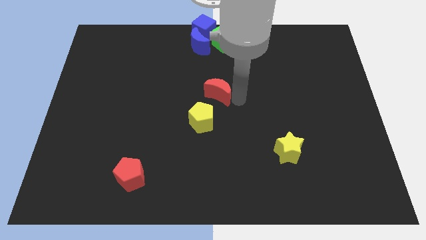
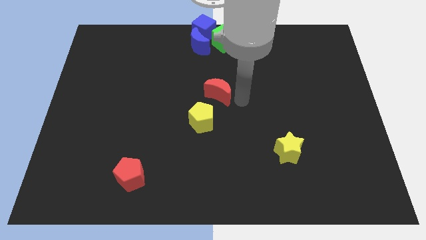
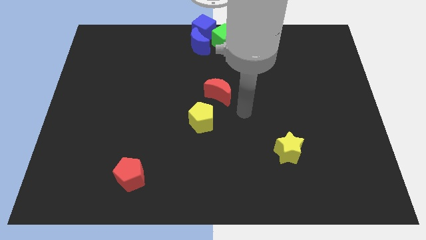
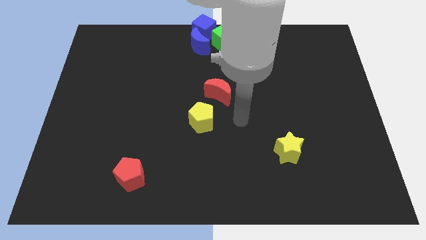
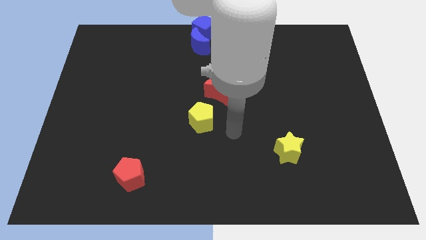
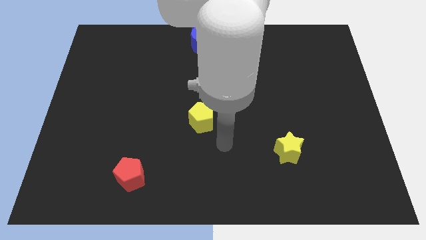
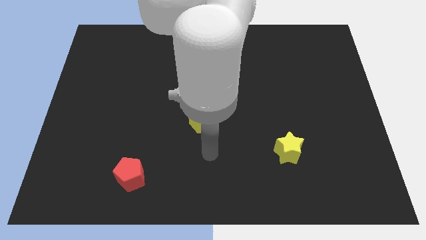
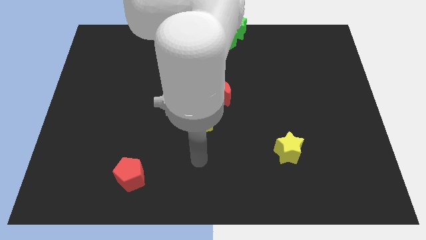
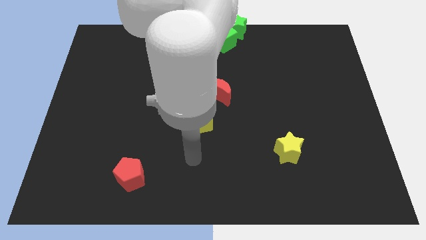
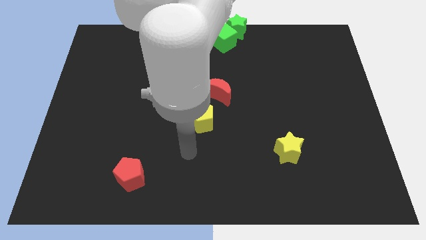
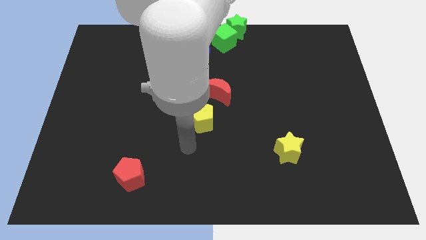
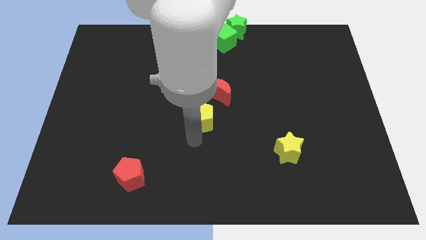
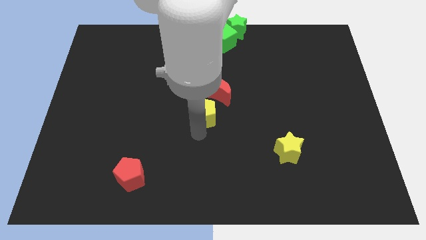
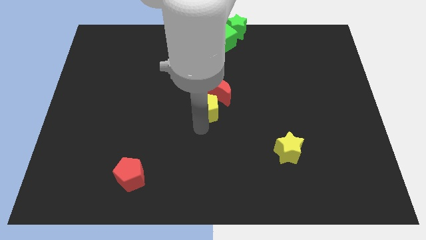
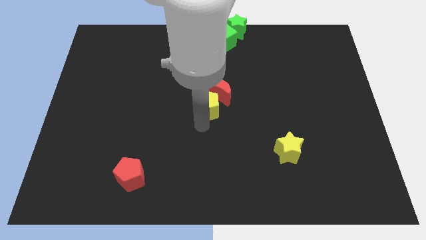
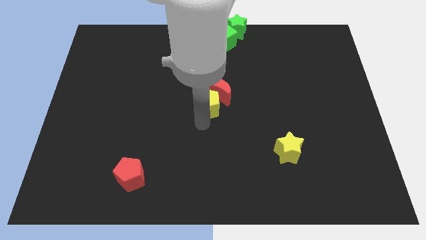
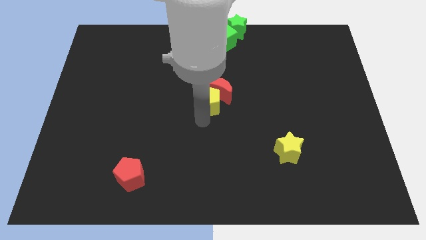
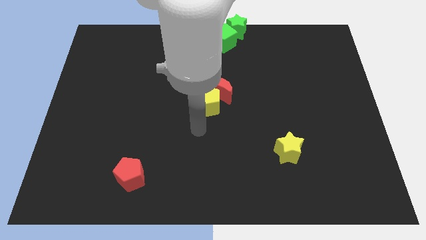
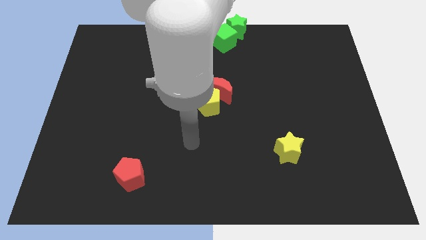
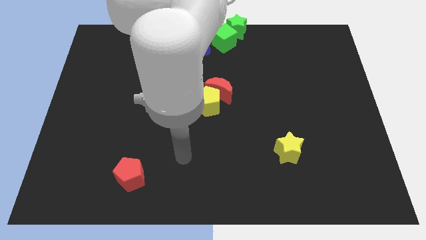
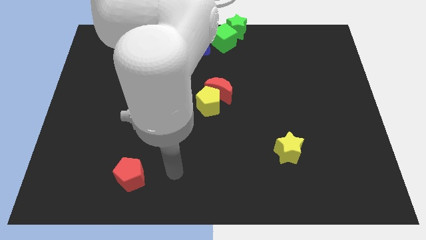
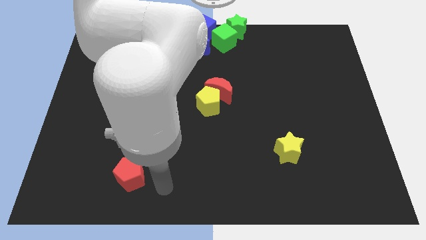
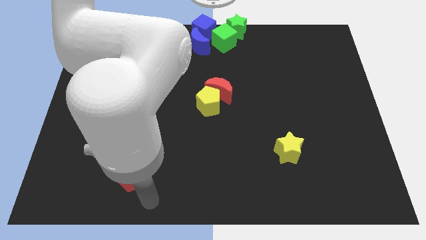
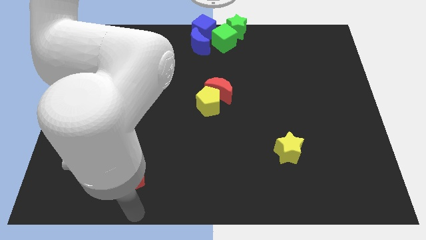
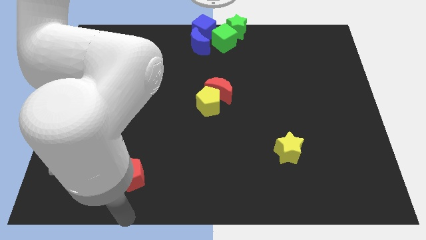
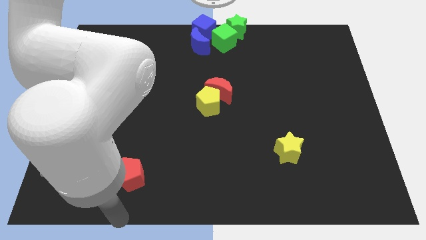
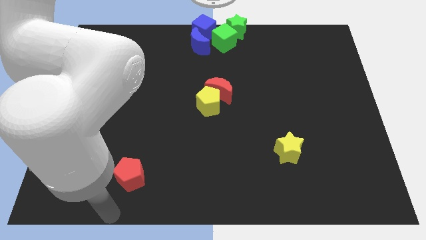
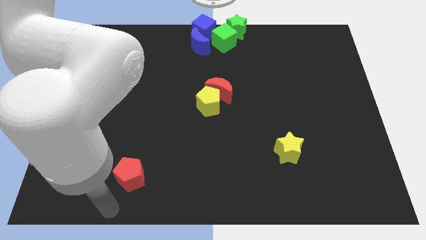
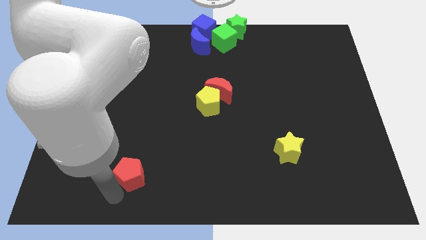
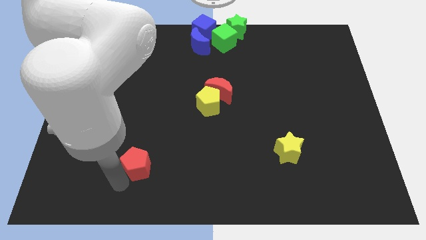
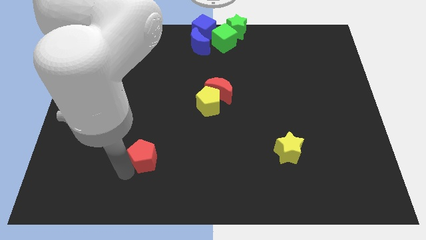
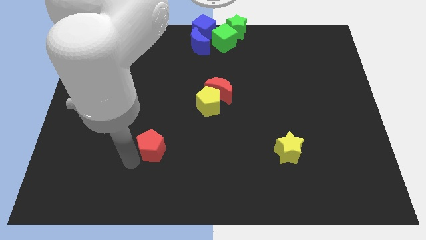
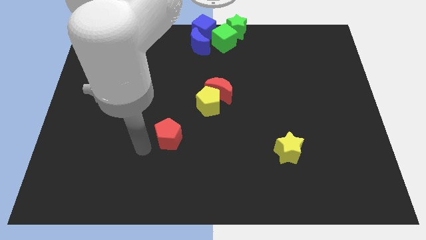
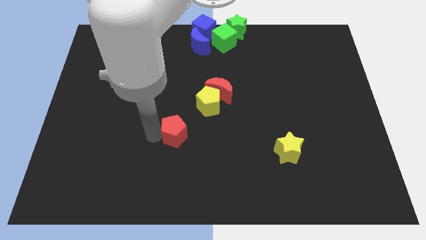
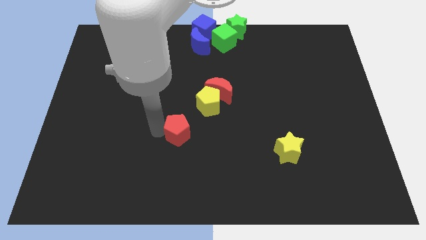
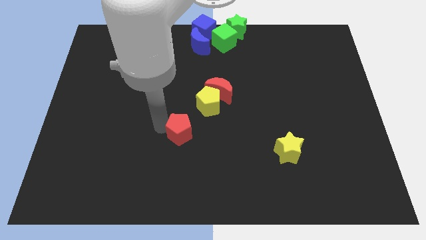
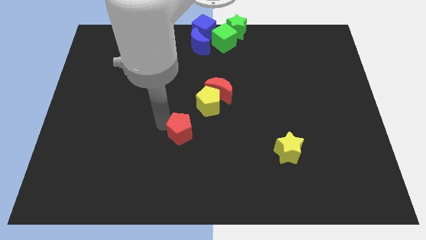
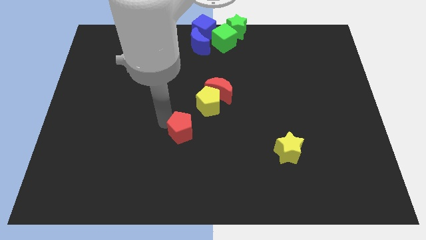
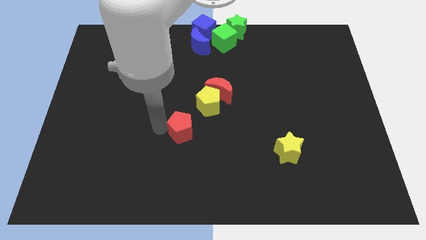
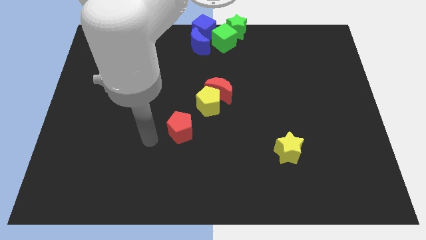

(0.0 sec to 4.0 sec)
push the yellow pentagon into the red crescent on the center of the board

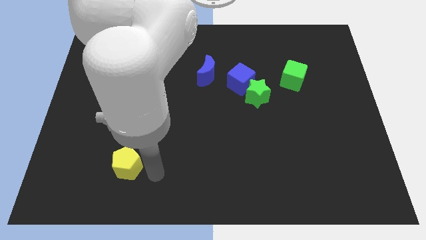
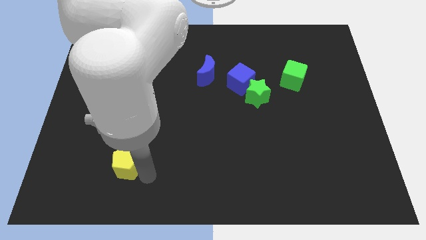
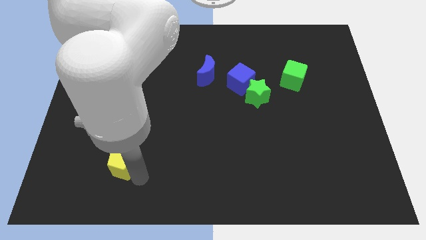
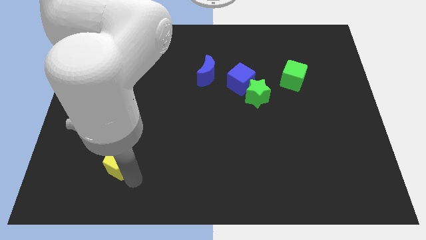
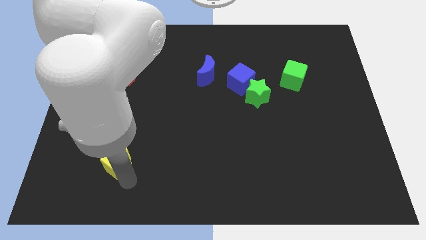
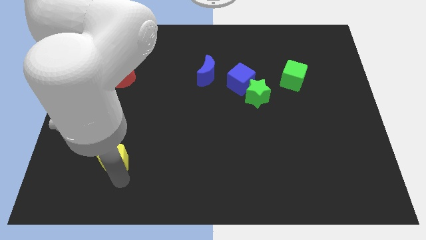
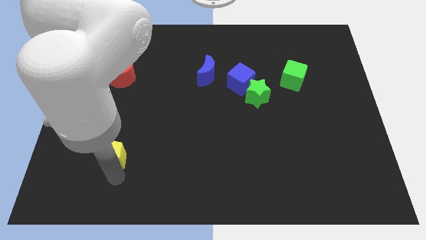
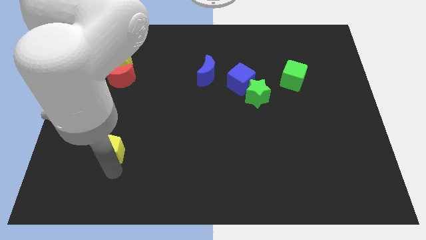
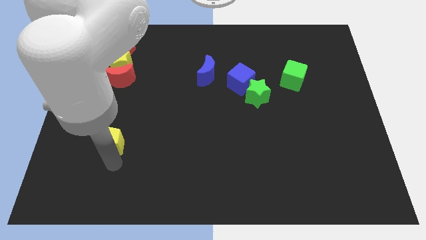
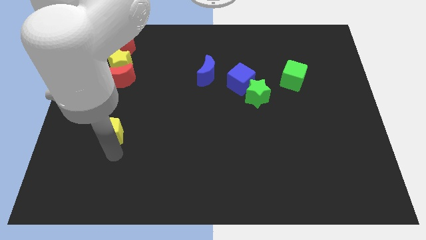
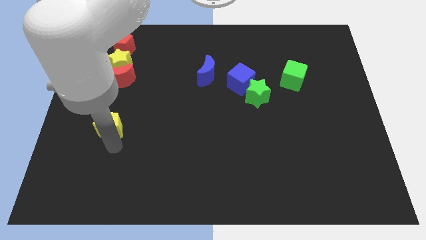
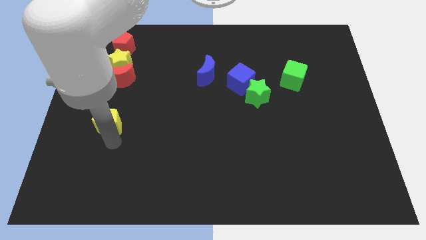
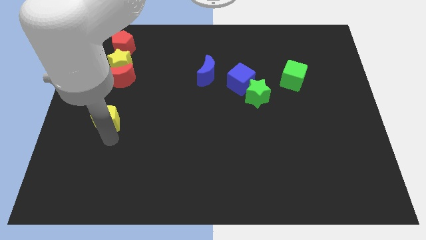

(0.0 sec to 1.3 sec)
push the yellow pentagon upward

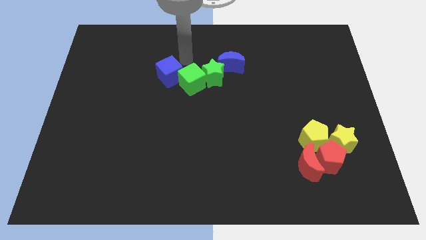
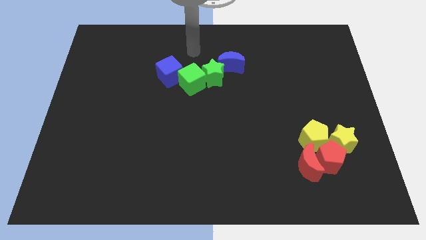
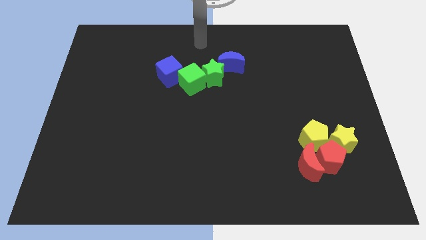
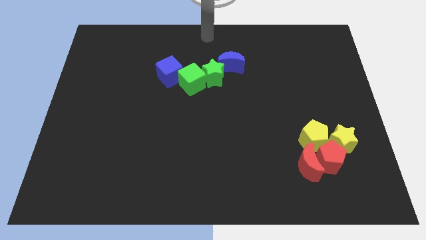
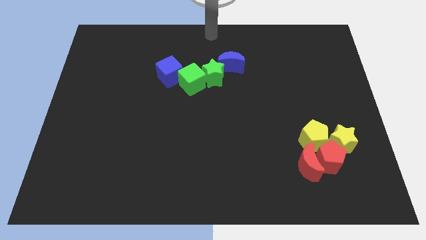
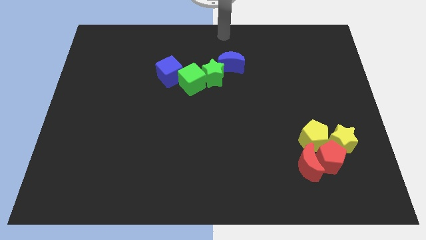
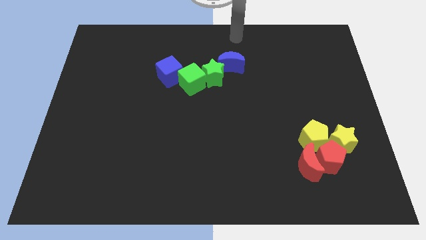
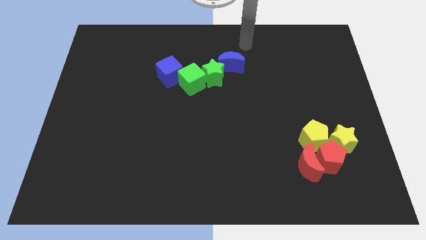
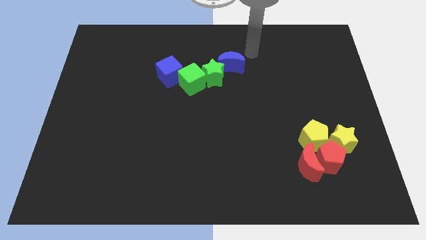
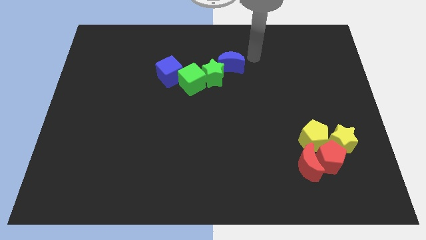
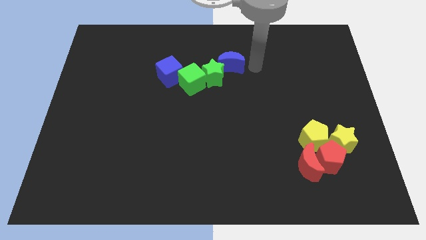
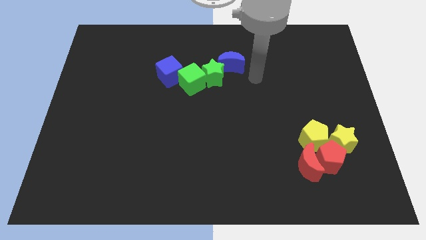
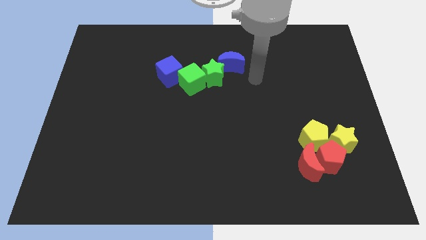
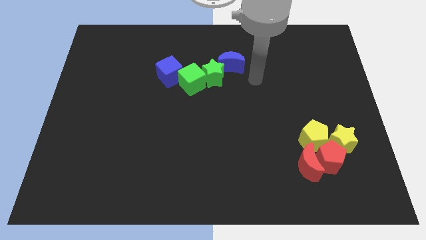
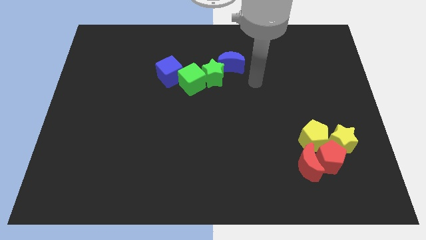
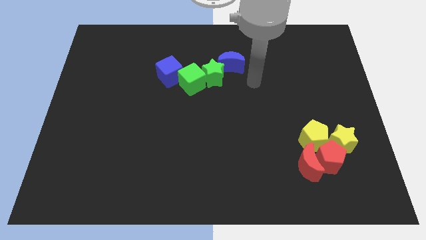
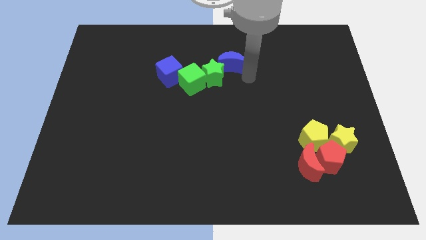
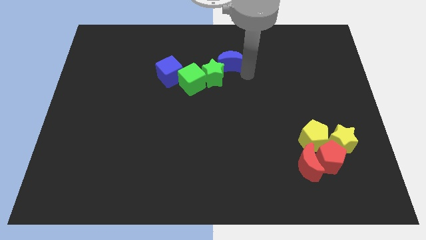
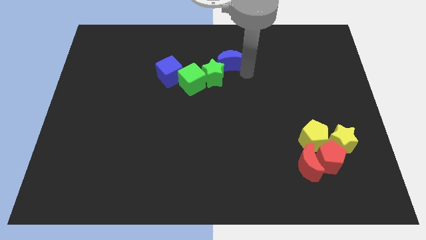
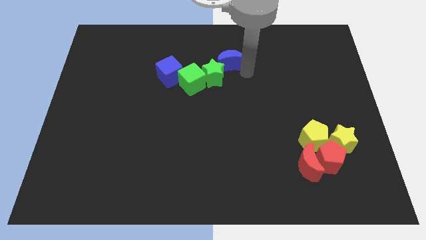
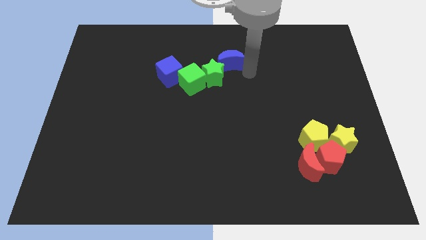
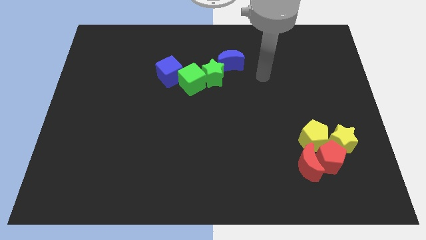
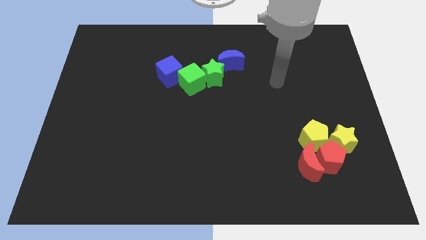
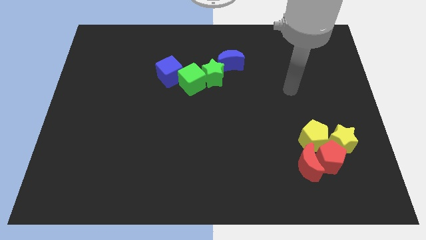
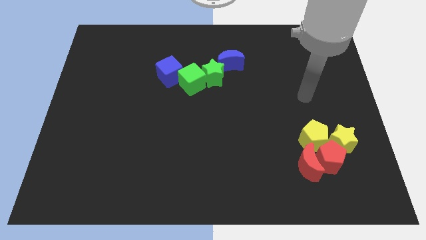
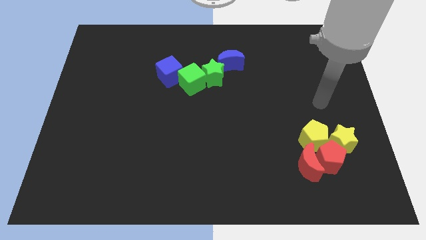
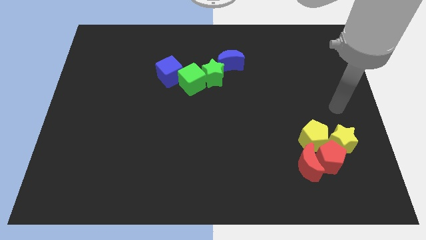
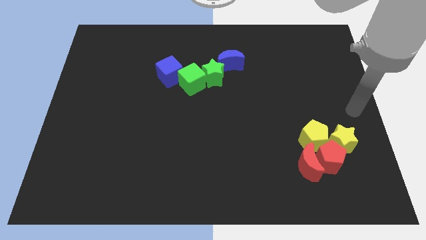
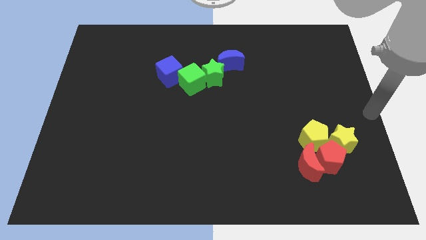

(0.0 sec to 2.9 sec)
slightly push the blue cube downwards

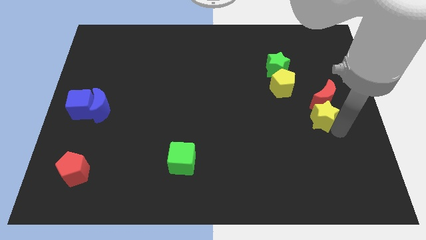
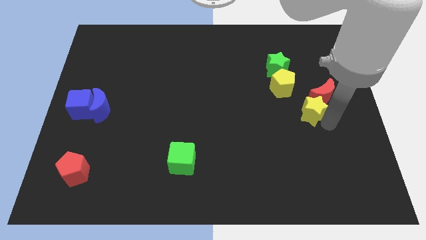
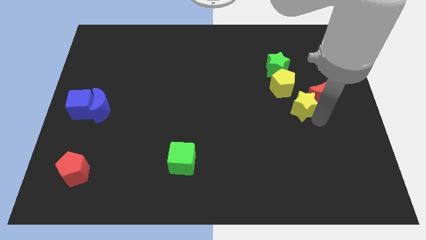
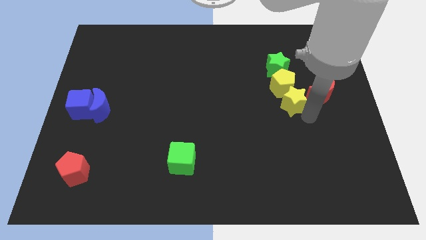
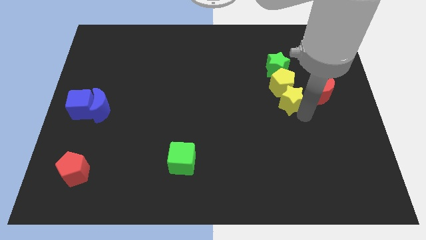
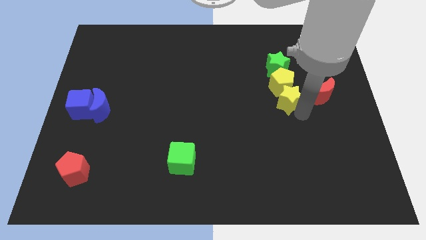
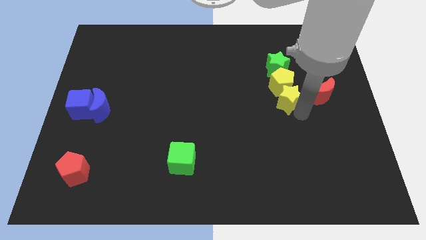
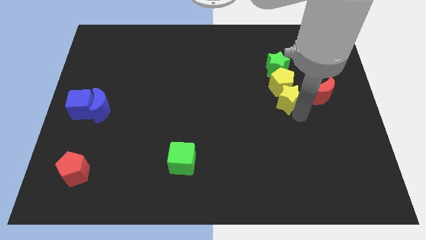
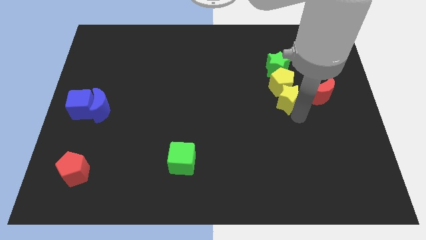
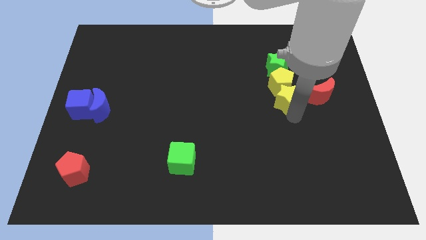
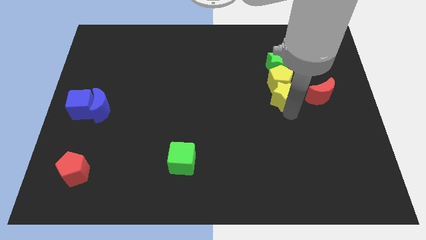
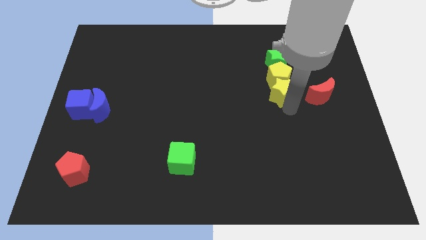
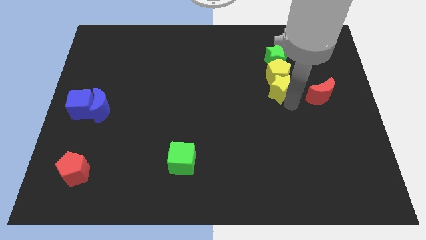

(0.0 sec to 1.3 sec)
move the yellow star into the yellow pentagon
